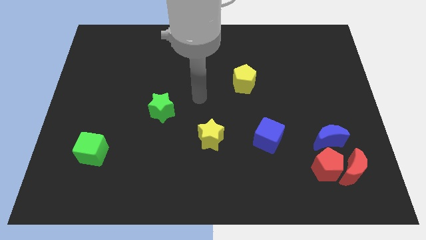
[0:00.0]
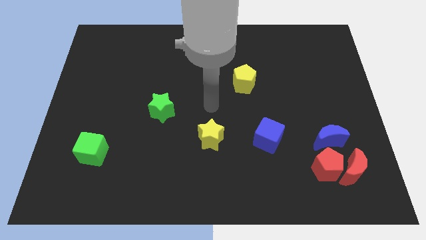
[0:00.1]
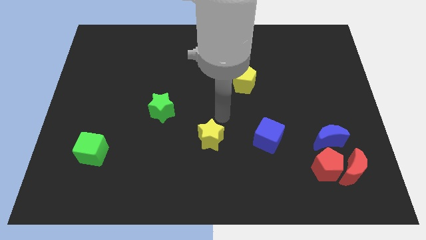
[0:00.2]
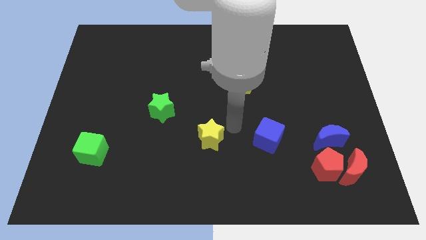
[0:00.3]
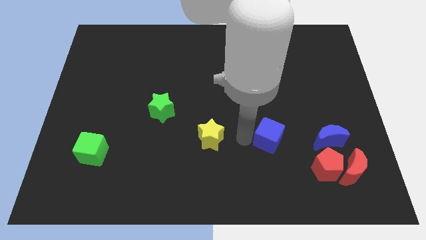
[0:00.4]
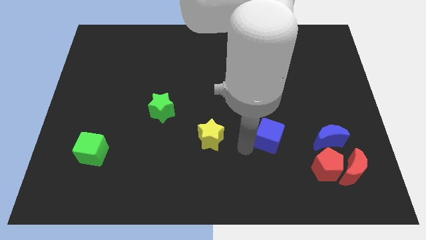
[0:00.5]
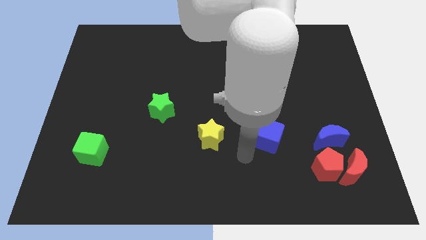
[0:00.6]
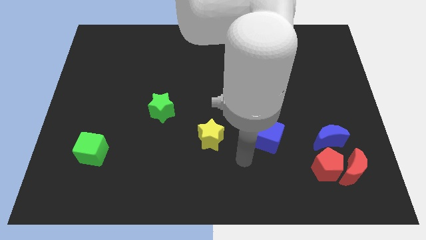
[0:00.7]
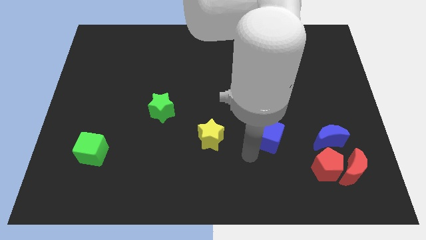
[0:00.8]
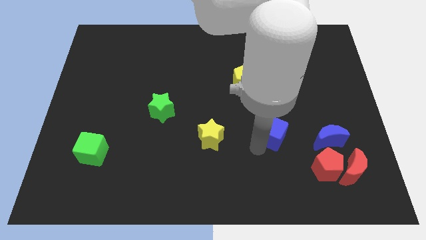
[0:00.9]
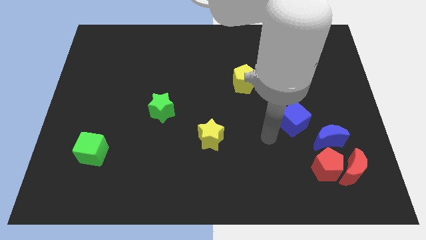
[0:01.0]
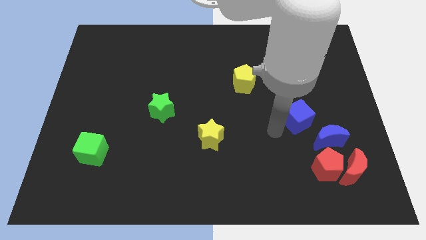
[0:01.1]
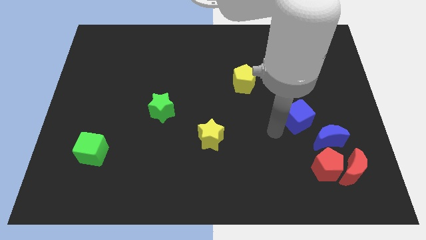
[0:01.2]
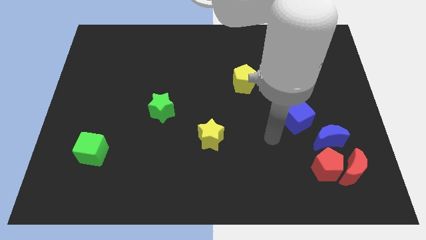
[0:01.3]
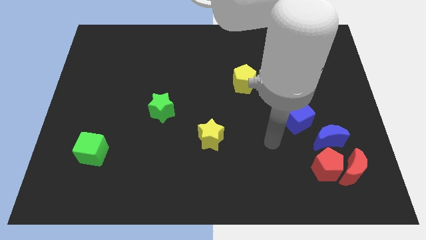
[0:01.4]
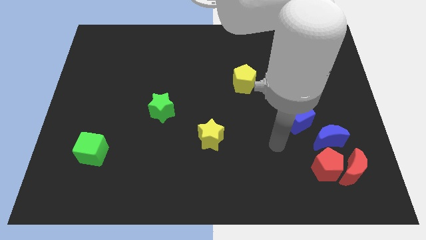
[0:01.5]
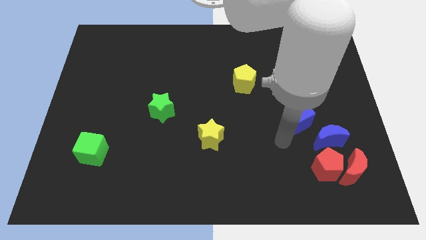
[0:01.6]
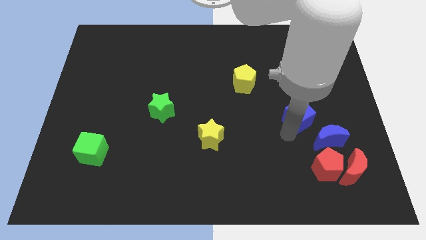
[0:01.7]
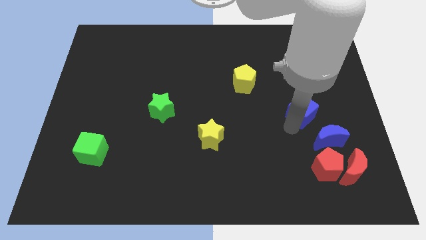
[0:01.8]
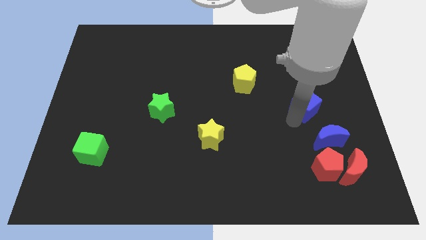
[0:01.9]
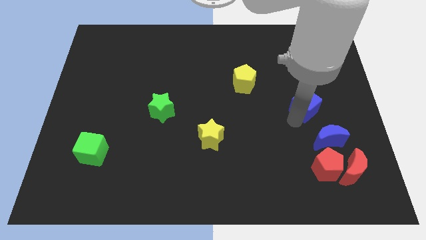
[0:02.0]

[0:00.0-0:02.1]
push the blue cube to the top left of the blue semi circle

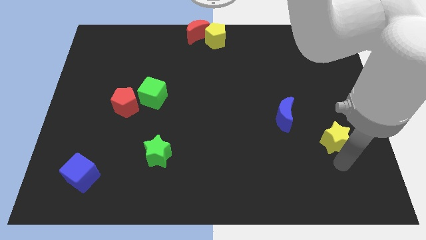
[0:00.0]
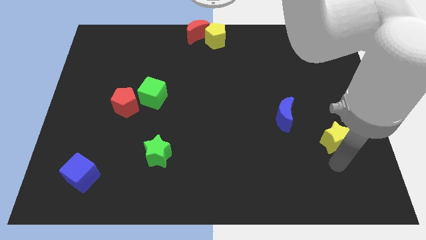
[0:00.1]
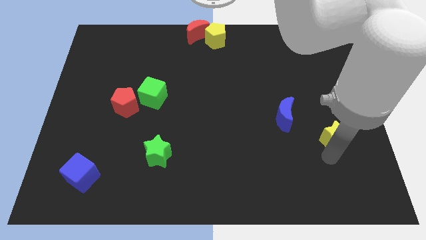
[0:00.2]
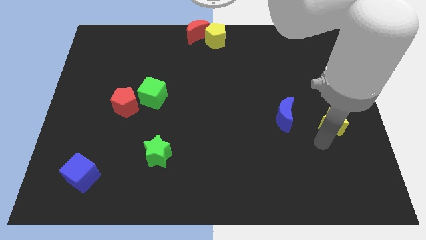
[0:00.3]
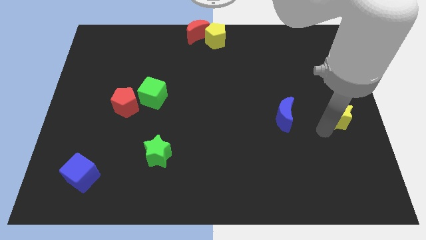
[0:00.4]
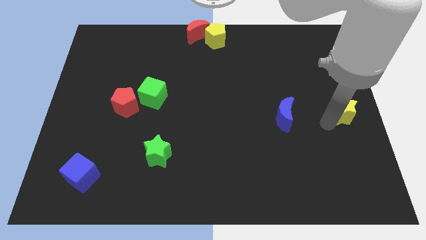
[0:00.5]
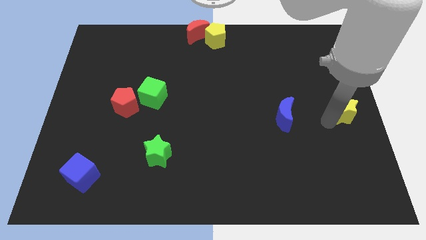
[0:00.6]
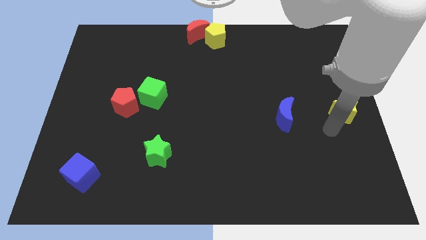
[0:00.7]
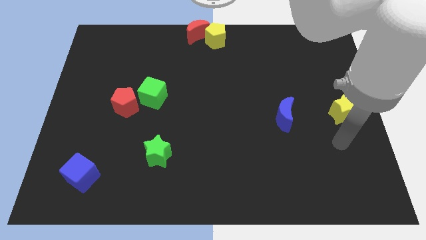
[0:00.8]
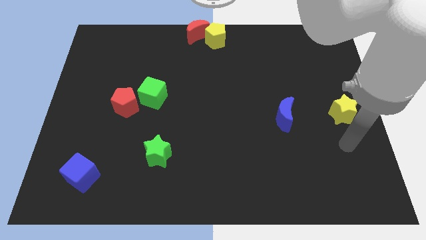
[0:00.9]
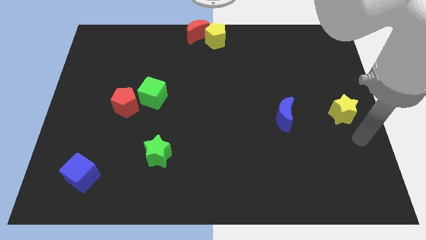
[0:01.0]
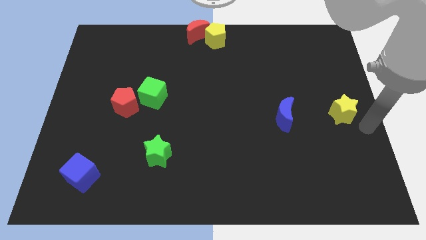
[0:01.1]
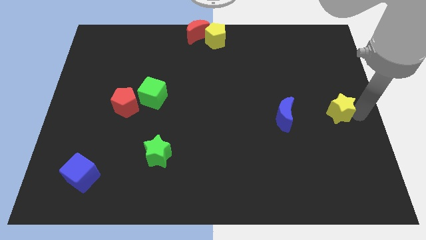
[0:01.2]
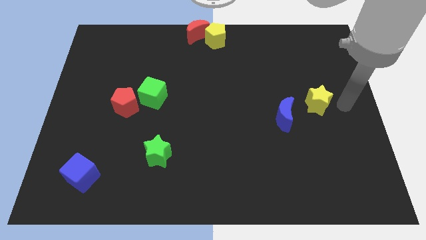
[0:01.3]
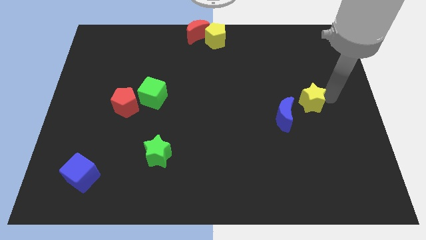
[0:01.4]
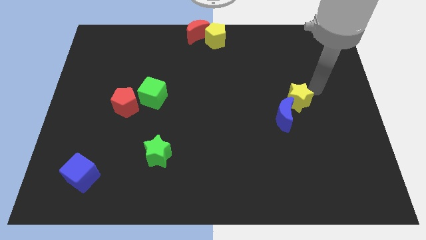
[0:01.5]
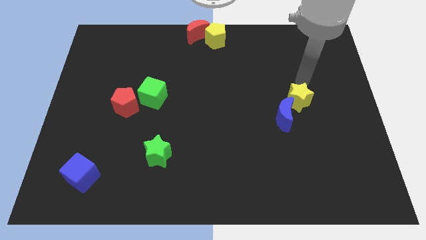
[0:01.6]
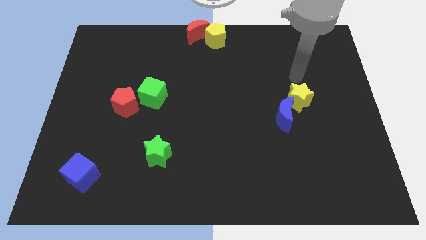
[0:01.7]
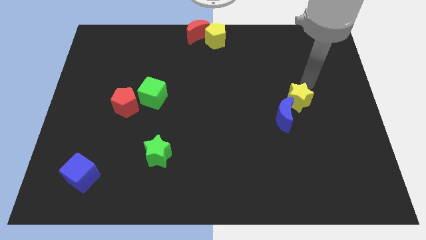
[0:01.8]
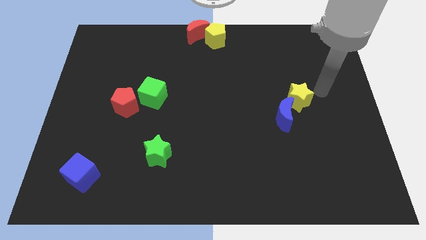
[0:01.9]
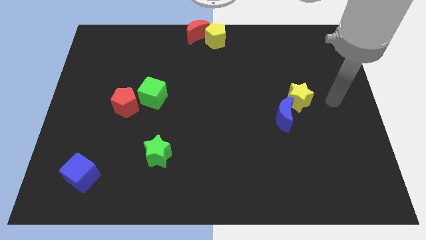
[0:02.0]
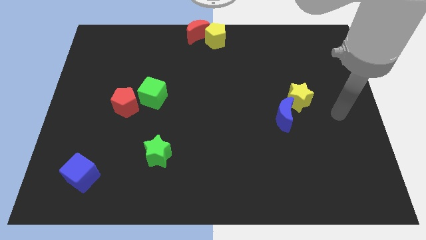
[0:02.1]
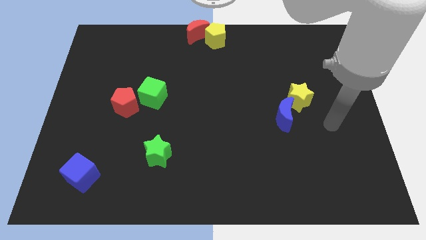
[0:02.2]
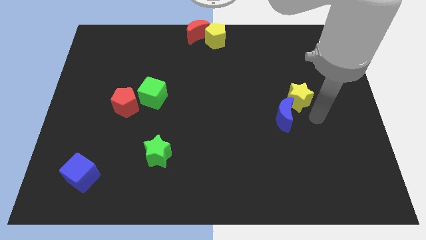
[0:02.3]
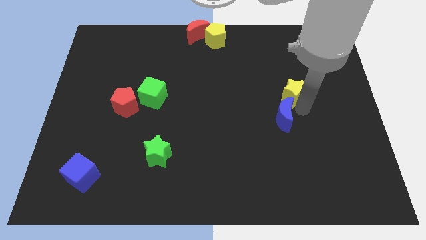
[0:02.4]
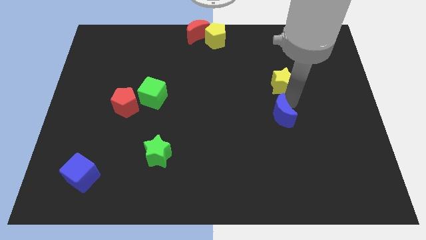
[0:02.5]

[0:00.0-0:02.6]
place the yellow star above the blue moon

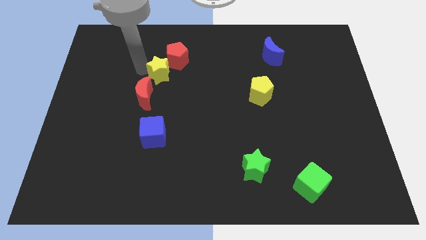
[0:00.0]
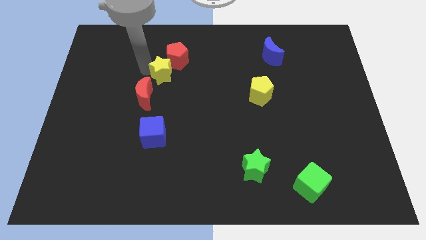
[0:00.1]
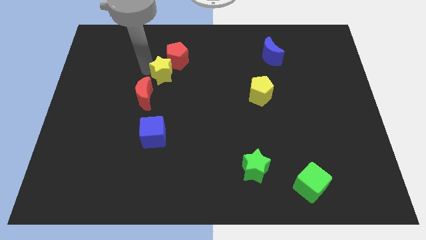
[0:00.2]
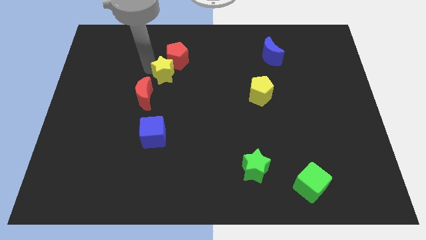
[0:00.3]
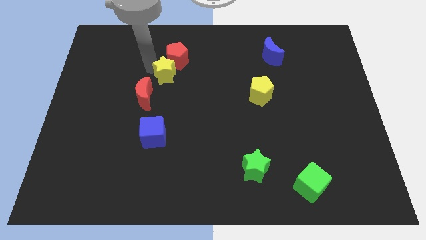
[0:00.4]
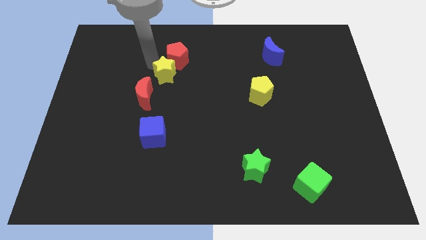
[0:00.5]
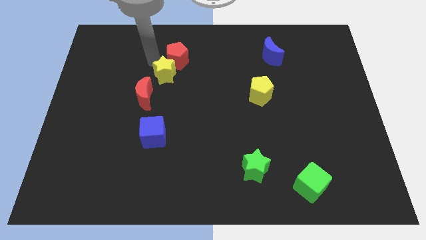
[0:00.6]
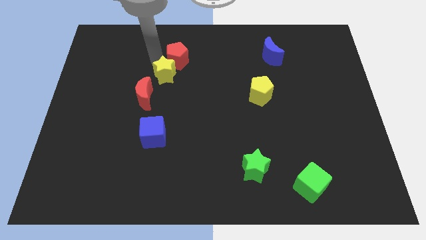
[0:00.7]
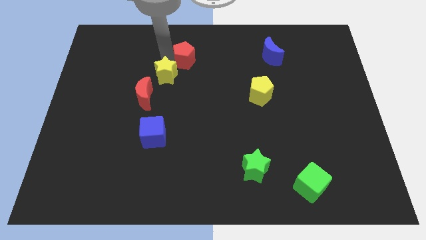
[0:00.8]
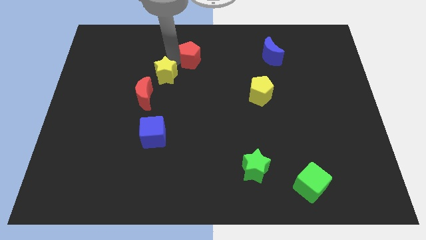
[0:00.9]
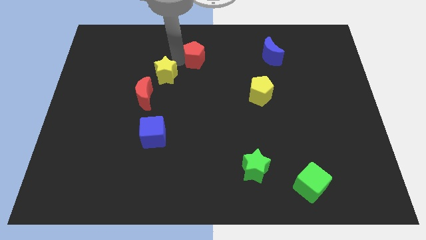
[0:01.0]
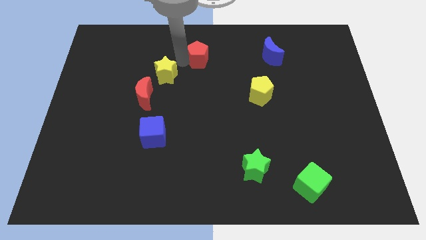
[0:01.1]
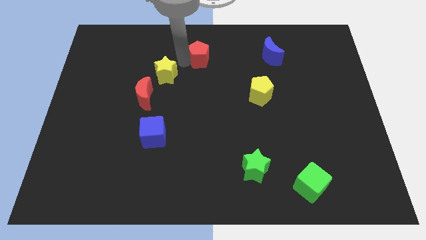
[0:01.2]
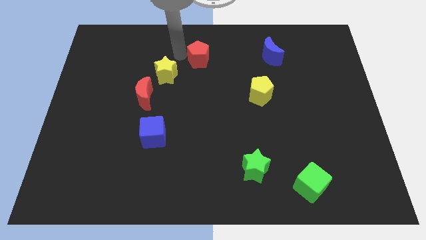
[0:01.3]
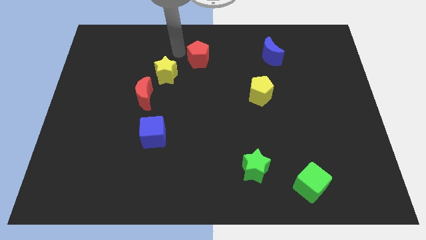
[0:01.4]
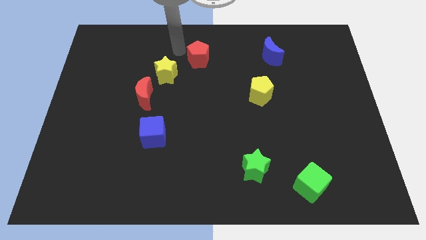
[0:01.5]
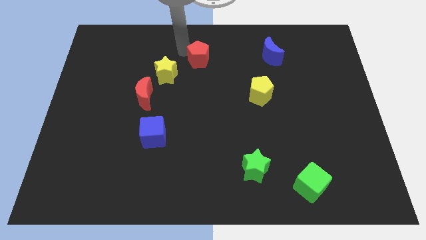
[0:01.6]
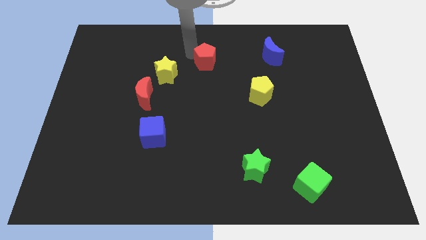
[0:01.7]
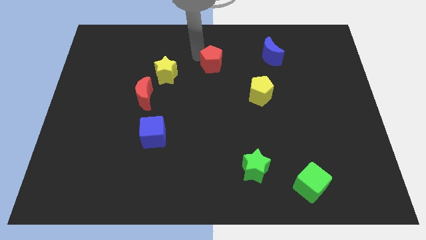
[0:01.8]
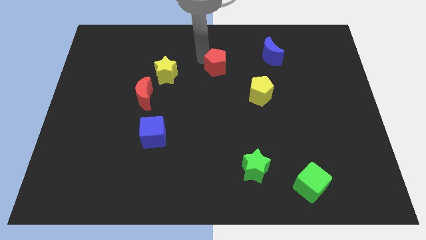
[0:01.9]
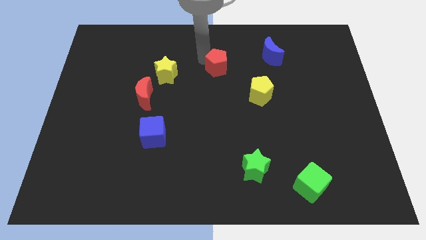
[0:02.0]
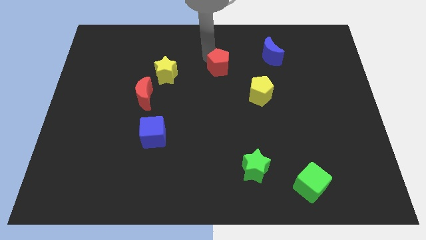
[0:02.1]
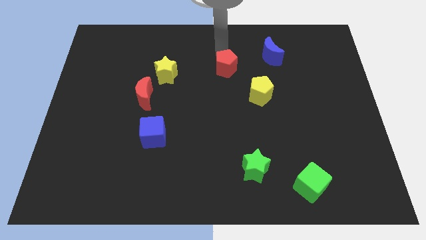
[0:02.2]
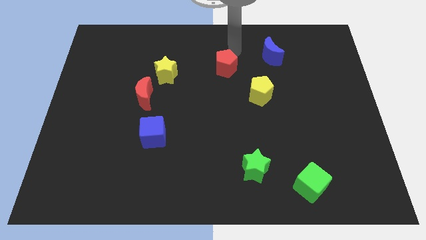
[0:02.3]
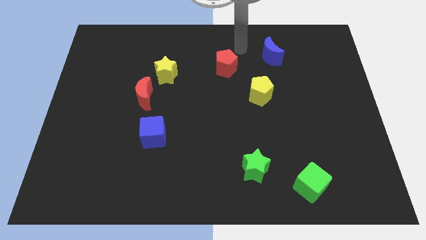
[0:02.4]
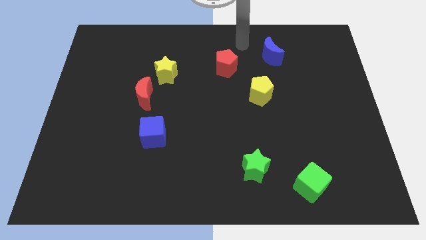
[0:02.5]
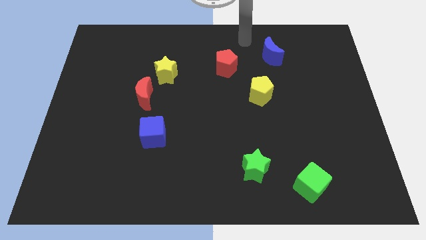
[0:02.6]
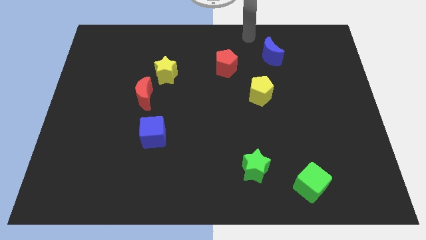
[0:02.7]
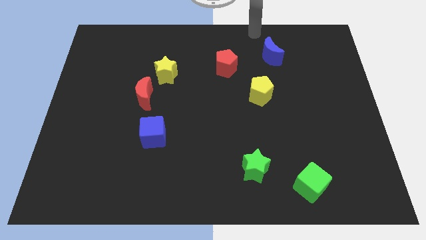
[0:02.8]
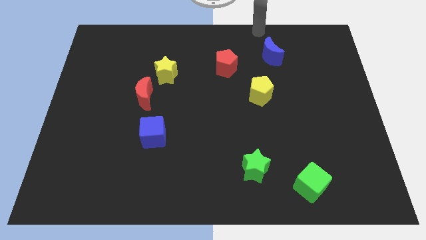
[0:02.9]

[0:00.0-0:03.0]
slide the yellow star and red pentagon

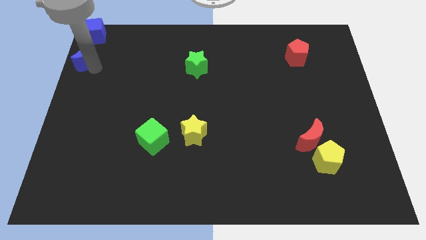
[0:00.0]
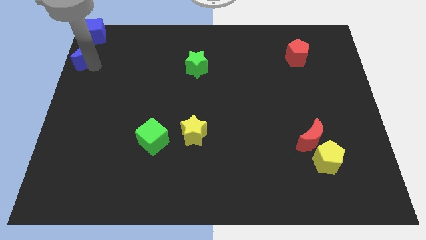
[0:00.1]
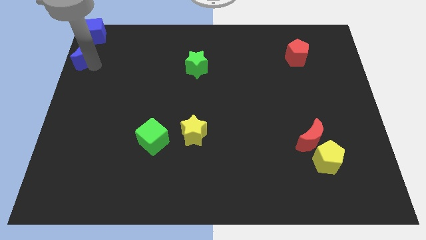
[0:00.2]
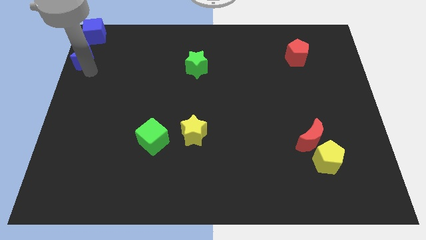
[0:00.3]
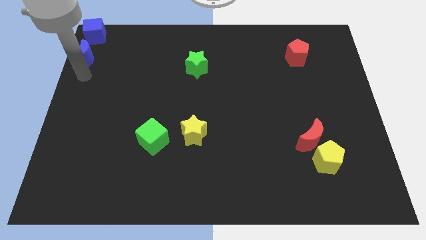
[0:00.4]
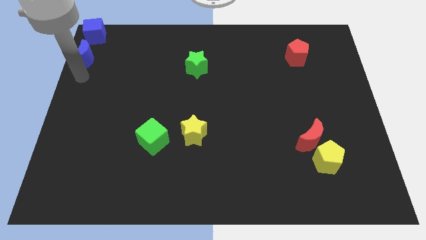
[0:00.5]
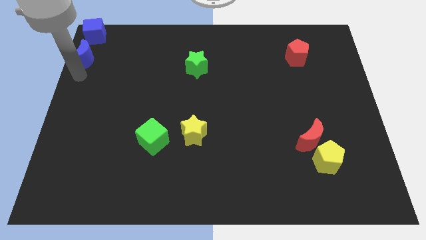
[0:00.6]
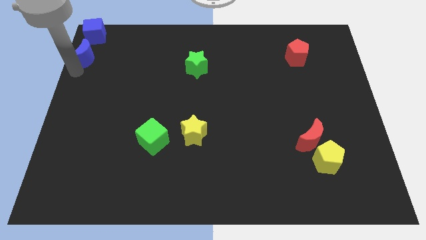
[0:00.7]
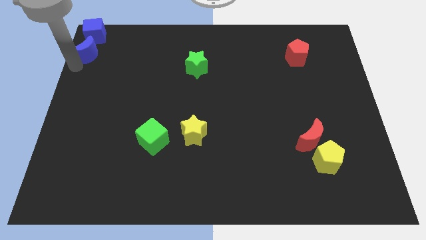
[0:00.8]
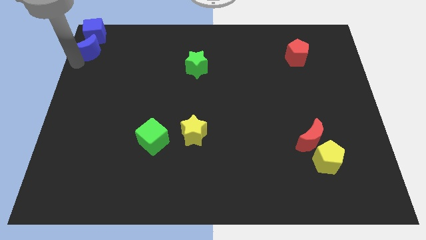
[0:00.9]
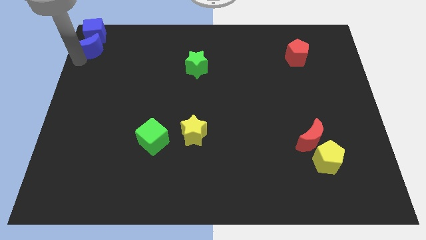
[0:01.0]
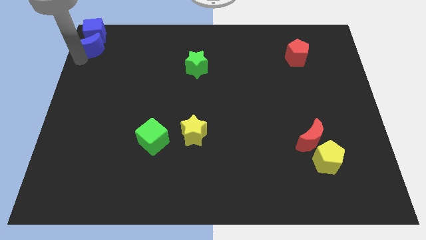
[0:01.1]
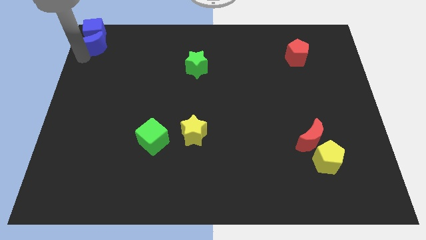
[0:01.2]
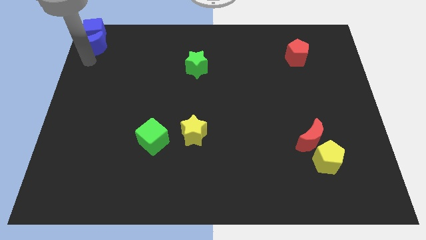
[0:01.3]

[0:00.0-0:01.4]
move the blue moon towards the blue cube
